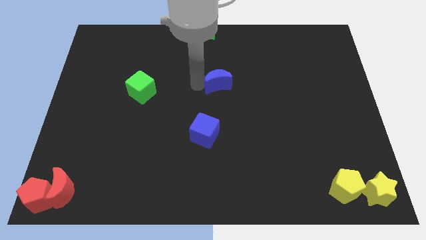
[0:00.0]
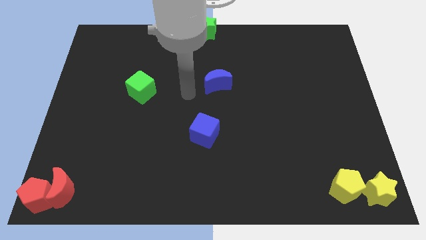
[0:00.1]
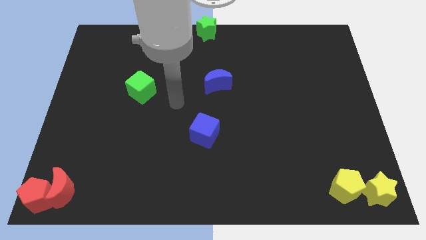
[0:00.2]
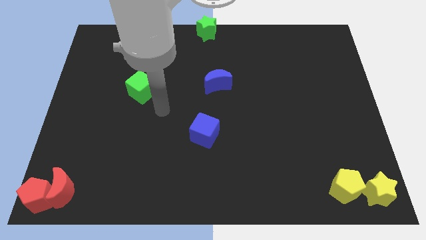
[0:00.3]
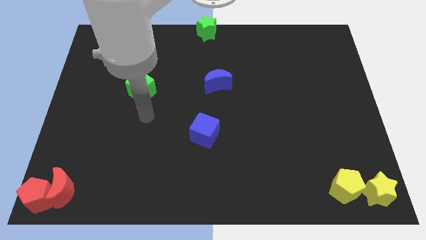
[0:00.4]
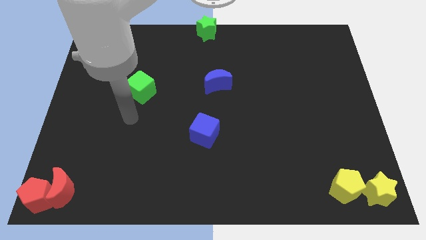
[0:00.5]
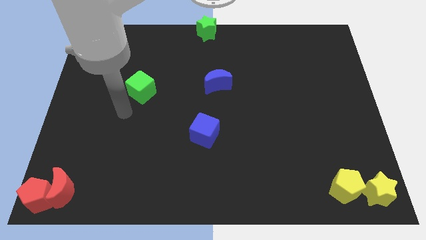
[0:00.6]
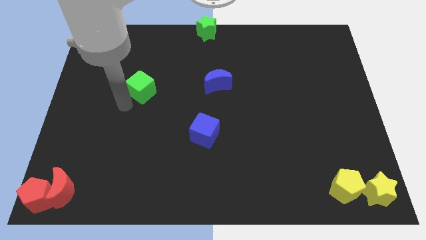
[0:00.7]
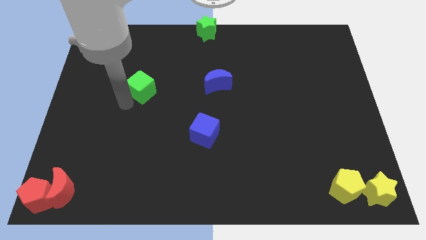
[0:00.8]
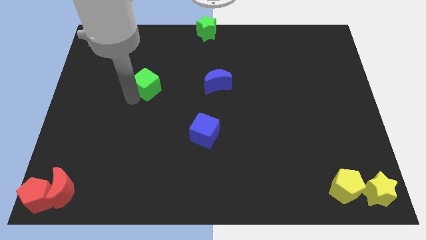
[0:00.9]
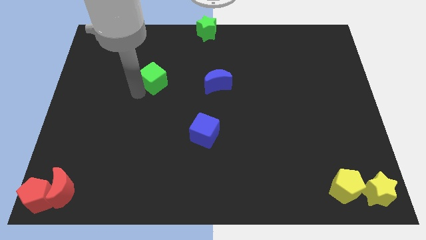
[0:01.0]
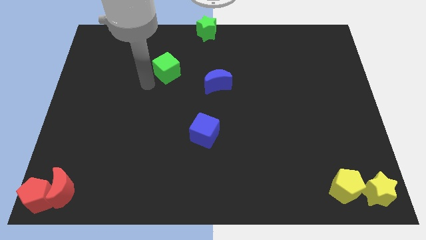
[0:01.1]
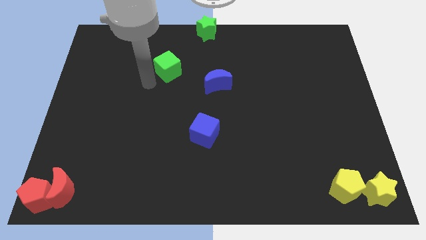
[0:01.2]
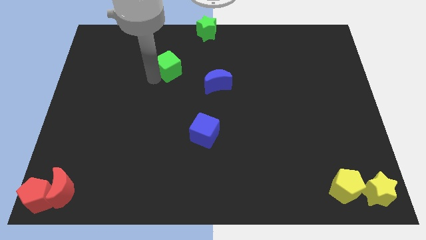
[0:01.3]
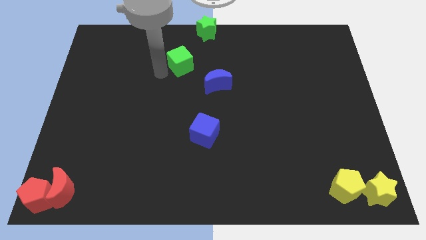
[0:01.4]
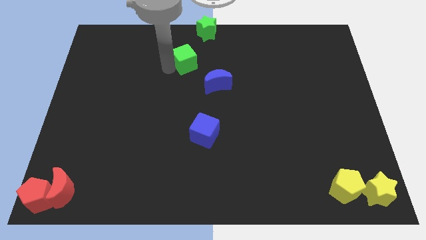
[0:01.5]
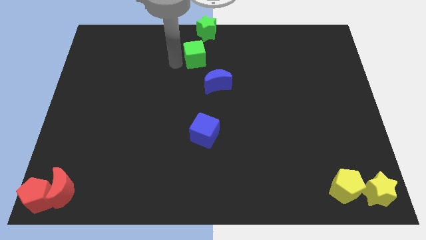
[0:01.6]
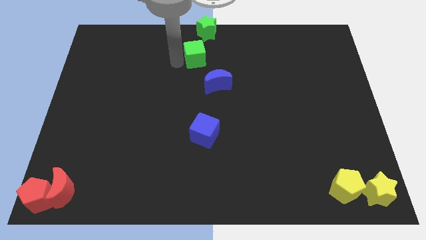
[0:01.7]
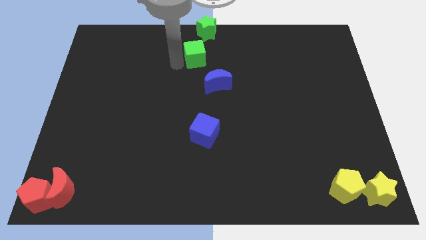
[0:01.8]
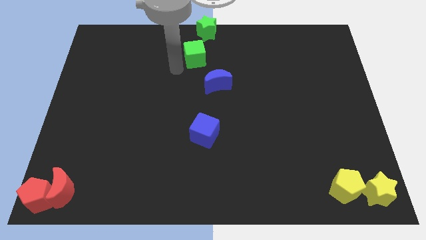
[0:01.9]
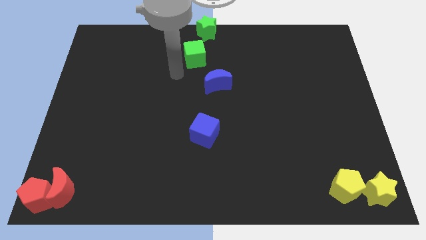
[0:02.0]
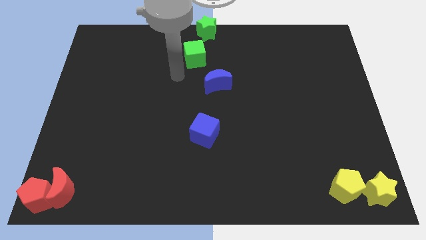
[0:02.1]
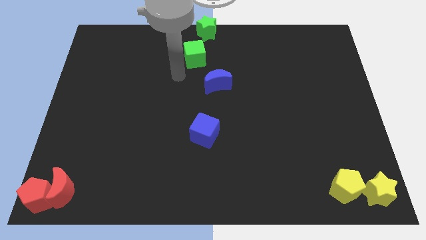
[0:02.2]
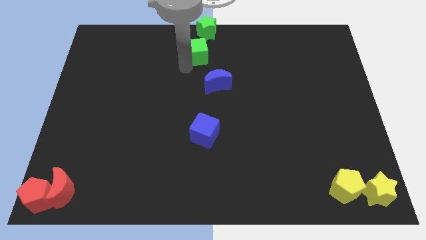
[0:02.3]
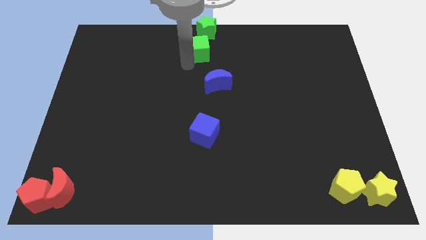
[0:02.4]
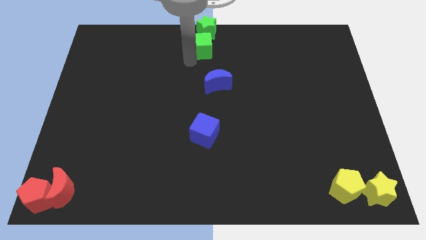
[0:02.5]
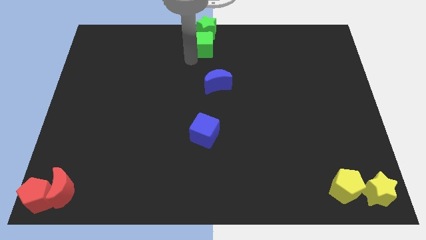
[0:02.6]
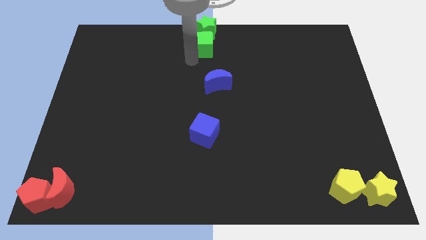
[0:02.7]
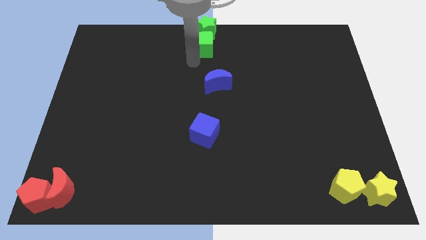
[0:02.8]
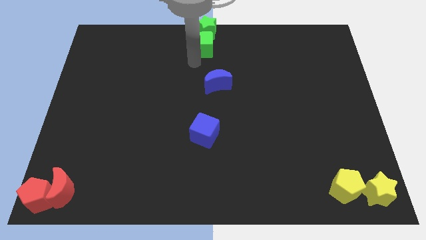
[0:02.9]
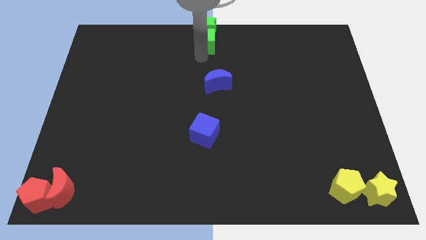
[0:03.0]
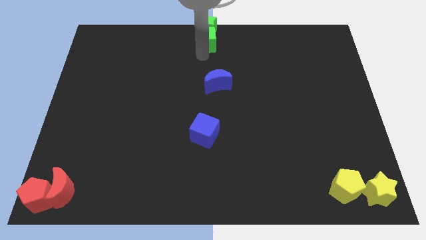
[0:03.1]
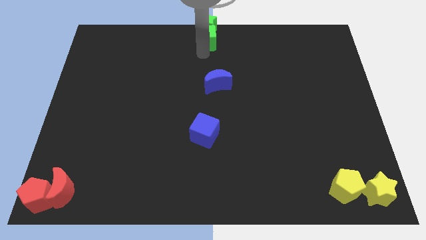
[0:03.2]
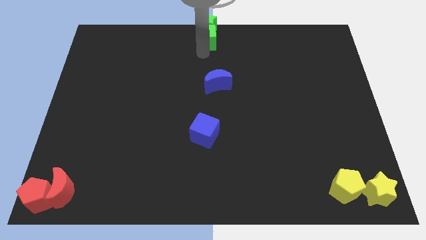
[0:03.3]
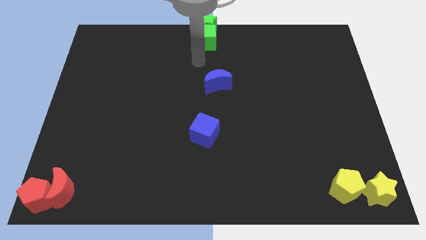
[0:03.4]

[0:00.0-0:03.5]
move the green cube into the bottom side of the green star

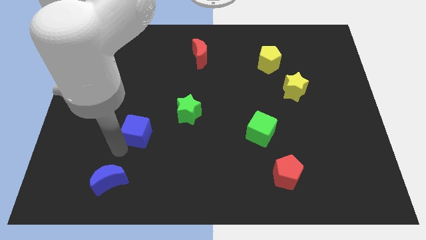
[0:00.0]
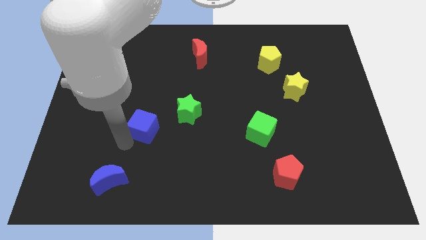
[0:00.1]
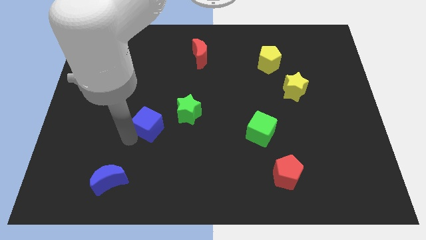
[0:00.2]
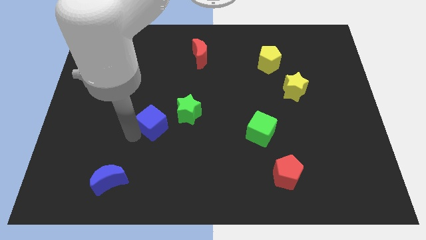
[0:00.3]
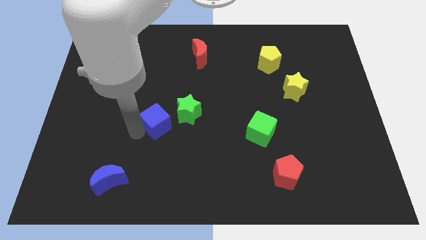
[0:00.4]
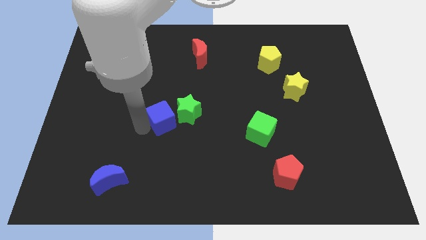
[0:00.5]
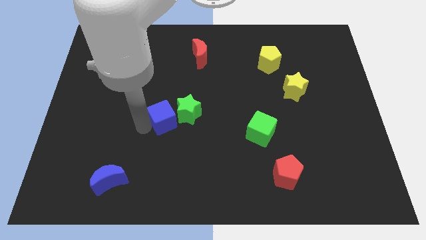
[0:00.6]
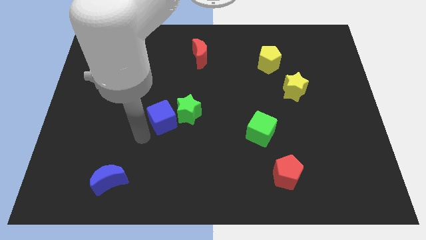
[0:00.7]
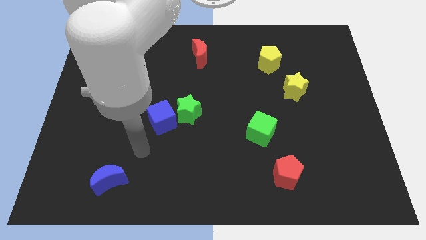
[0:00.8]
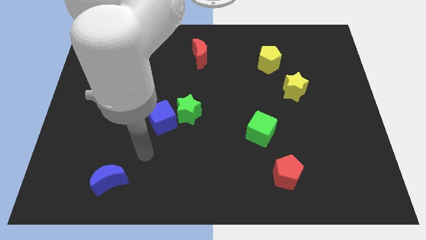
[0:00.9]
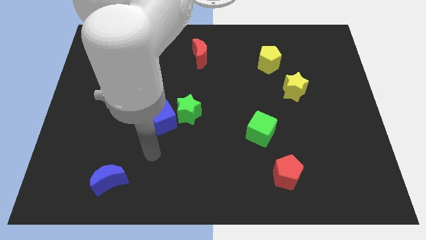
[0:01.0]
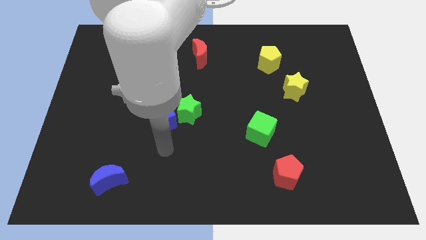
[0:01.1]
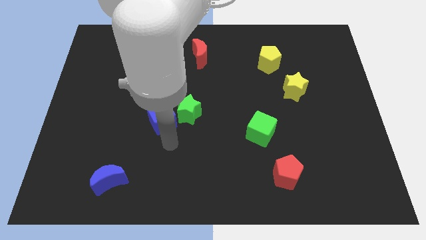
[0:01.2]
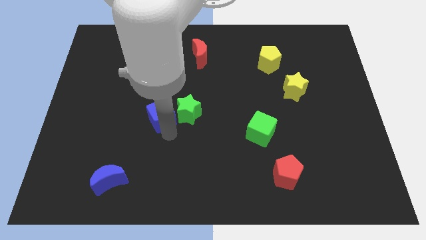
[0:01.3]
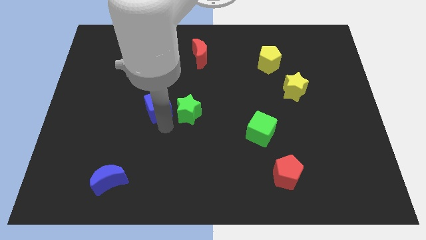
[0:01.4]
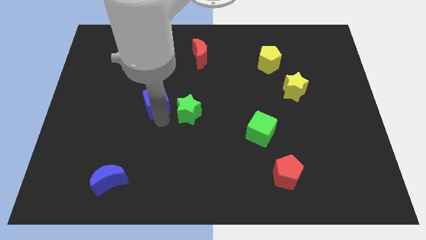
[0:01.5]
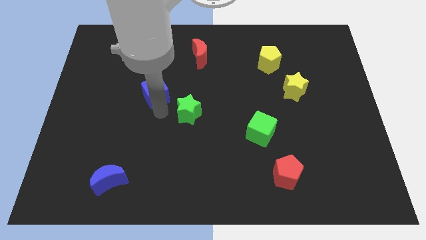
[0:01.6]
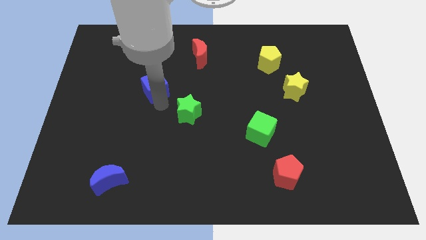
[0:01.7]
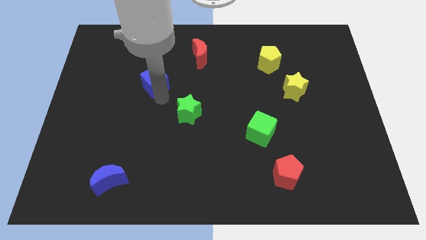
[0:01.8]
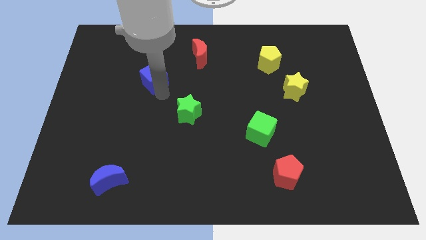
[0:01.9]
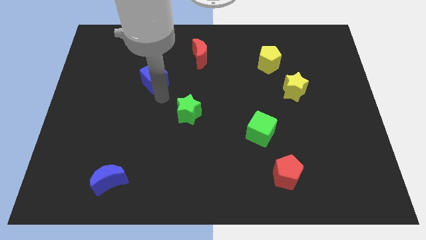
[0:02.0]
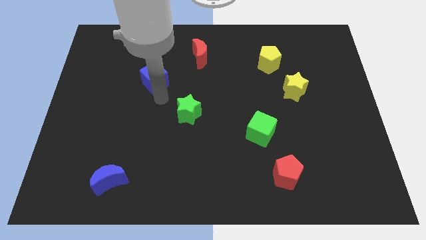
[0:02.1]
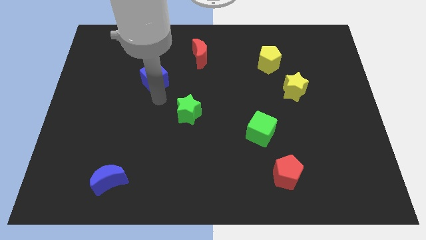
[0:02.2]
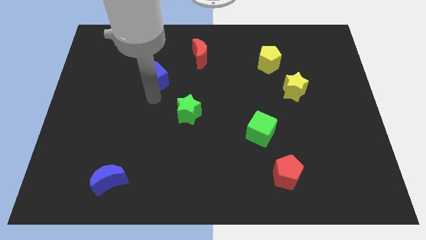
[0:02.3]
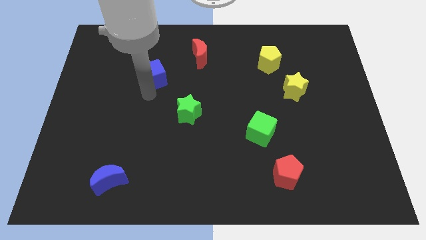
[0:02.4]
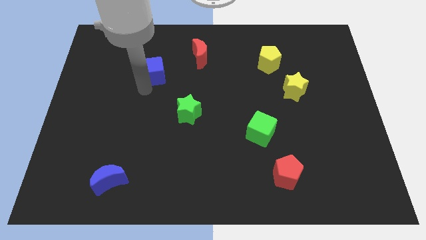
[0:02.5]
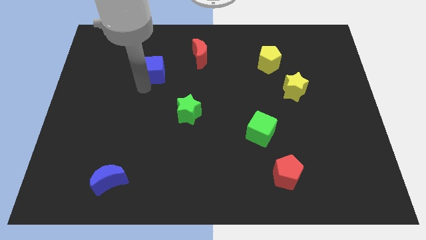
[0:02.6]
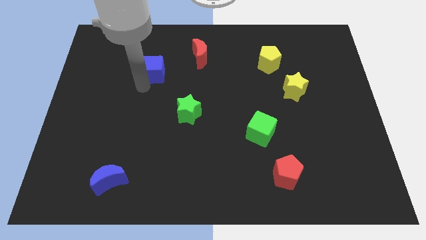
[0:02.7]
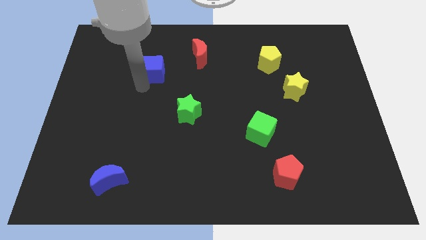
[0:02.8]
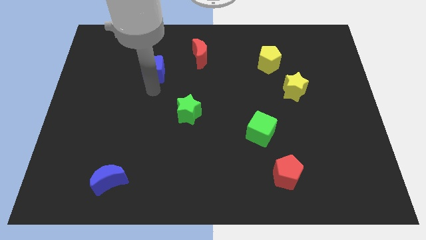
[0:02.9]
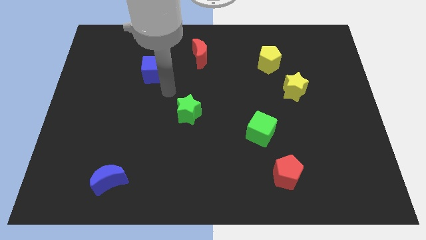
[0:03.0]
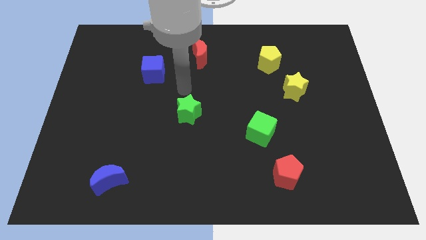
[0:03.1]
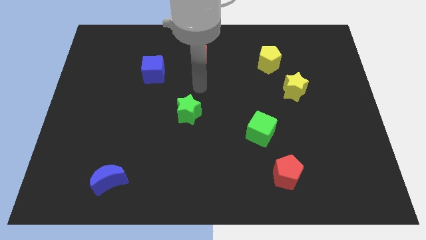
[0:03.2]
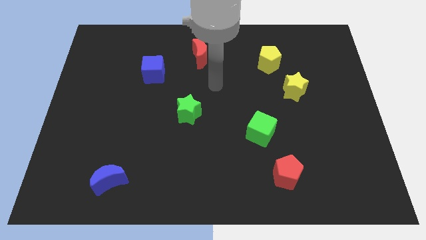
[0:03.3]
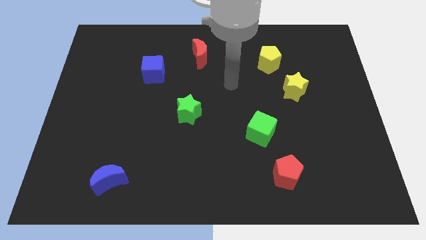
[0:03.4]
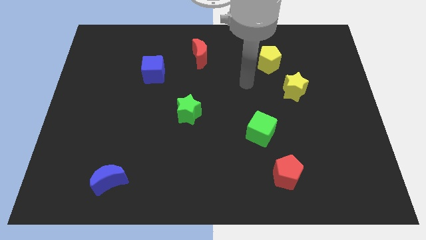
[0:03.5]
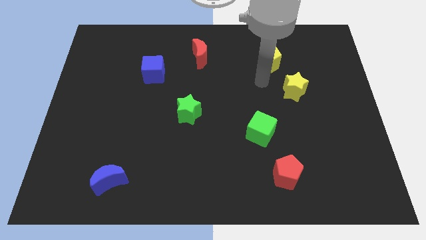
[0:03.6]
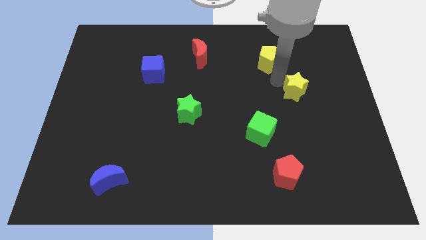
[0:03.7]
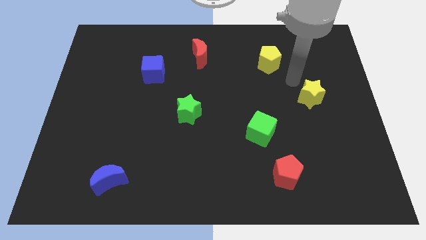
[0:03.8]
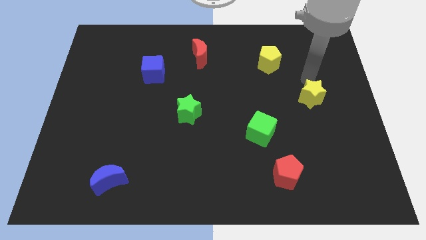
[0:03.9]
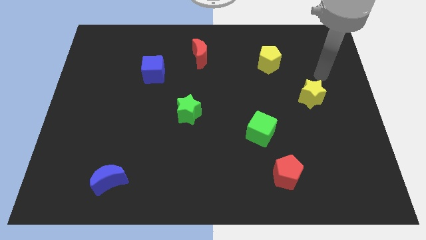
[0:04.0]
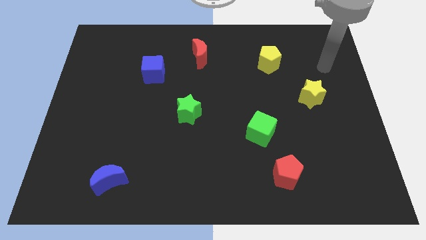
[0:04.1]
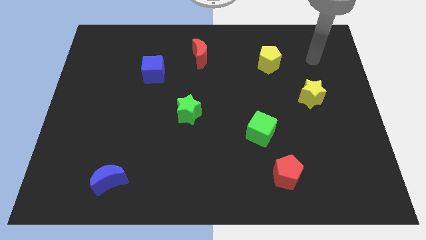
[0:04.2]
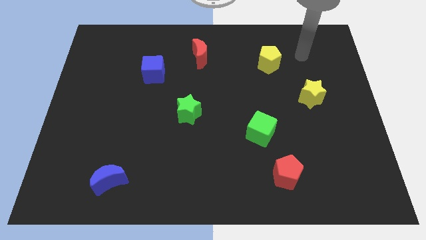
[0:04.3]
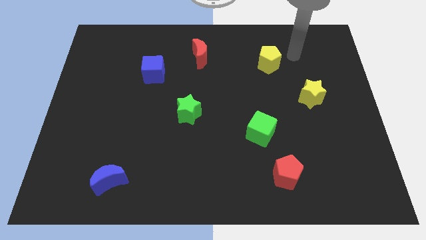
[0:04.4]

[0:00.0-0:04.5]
move the blue cube left between the red crescent and green star

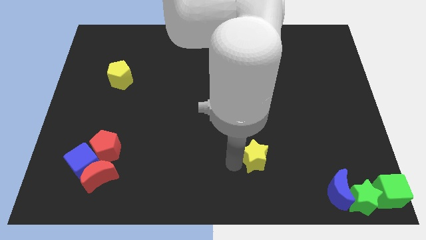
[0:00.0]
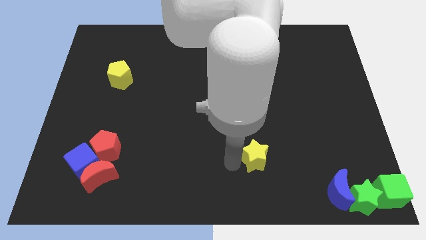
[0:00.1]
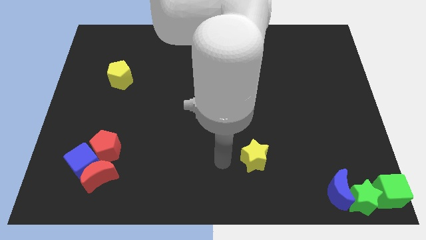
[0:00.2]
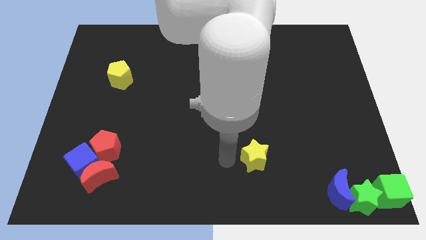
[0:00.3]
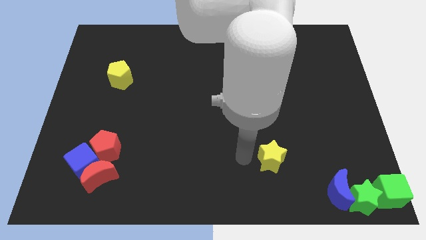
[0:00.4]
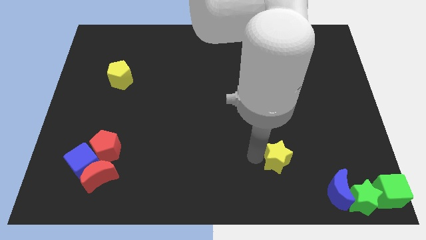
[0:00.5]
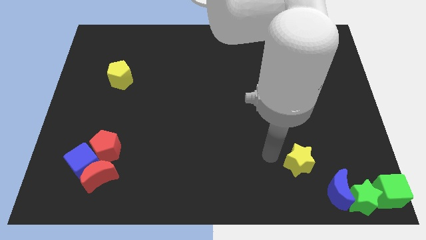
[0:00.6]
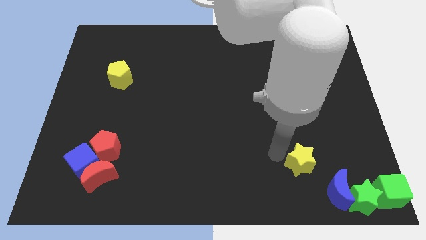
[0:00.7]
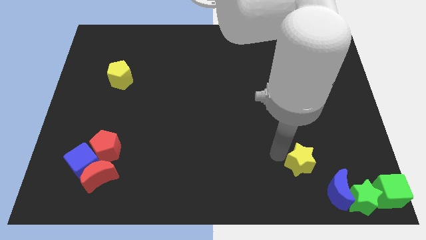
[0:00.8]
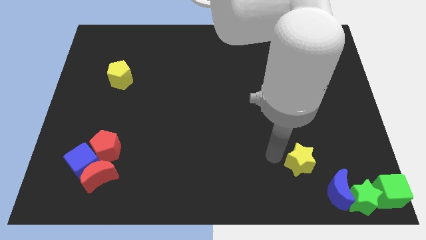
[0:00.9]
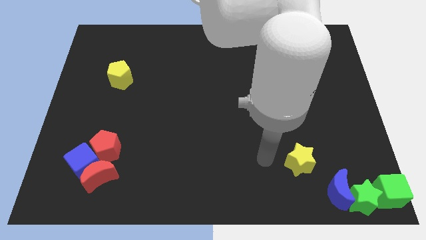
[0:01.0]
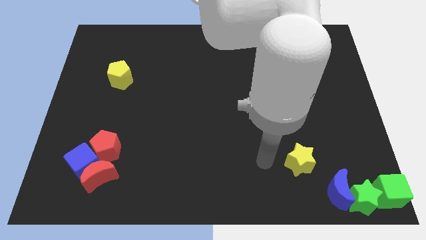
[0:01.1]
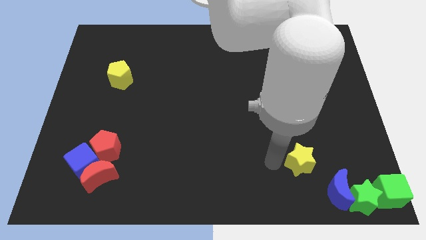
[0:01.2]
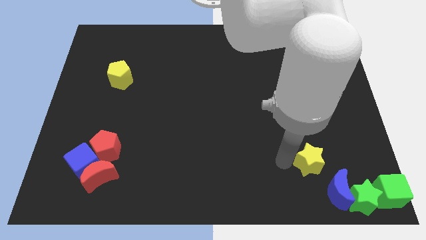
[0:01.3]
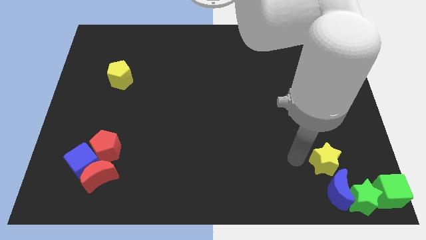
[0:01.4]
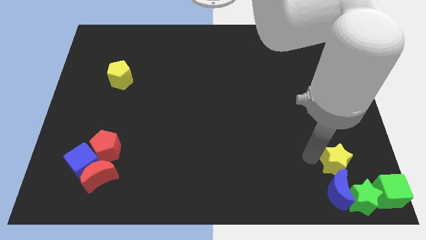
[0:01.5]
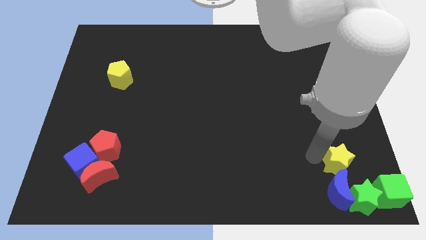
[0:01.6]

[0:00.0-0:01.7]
push the yellow star above to the blue moon
